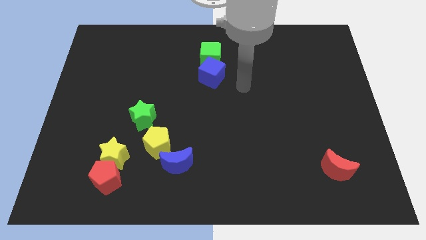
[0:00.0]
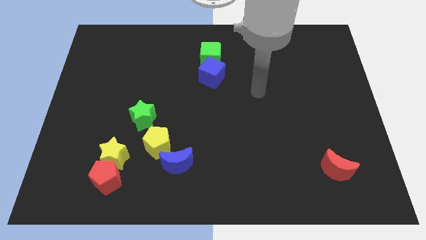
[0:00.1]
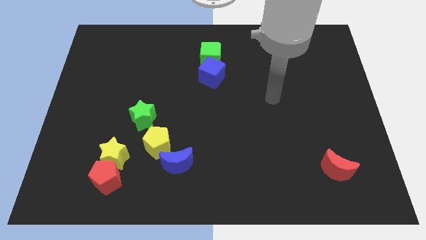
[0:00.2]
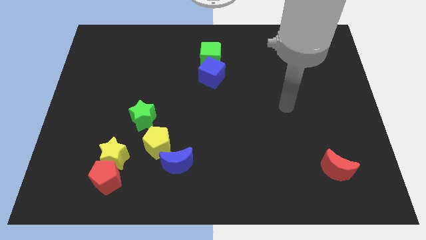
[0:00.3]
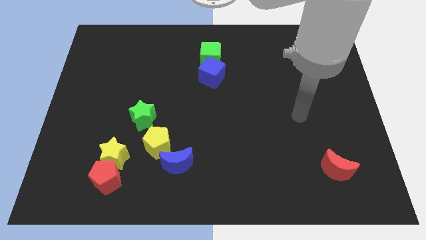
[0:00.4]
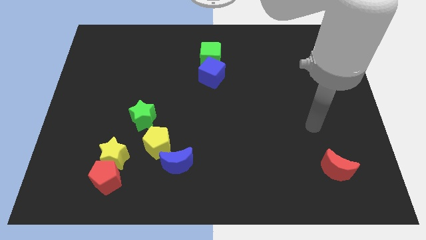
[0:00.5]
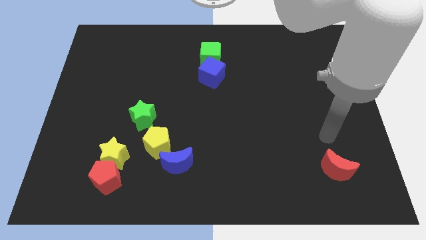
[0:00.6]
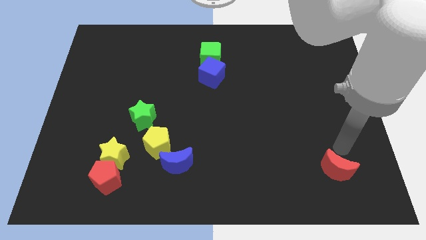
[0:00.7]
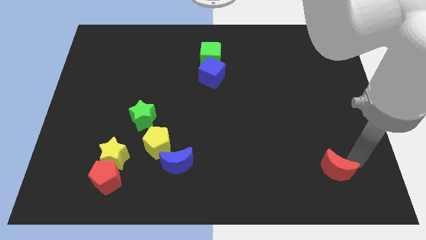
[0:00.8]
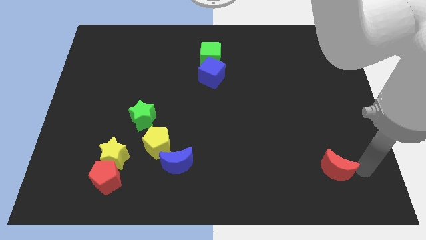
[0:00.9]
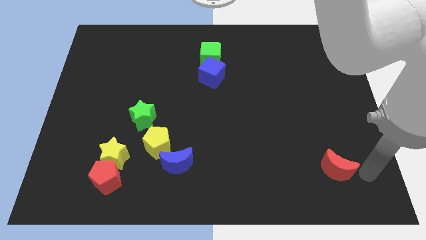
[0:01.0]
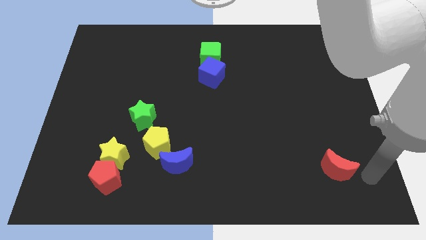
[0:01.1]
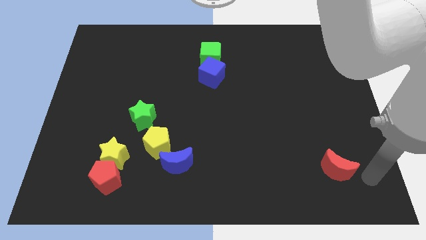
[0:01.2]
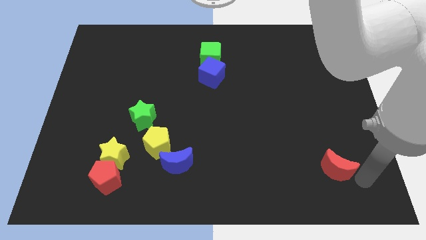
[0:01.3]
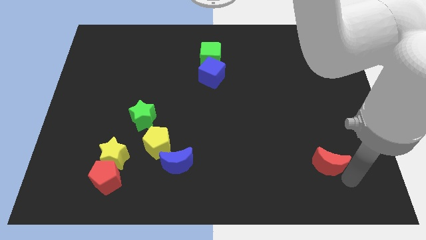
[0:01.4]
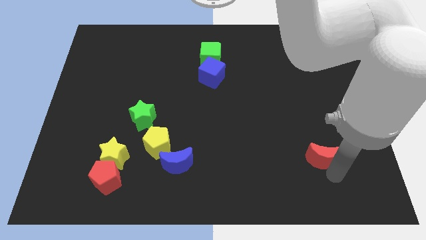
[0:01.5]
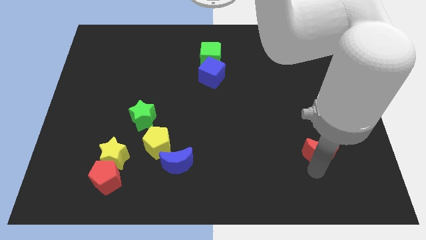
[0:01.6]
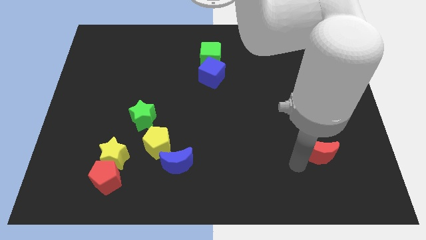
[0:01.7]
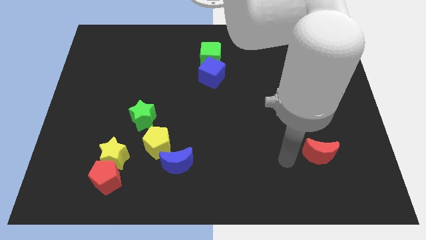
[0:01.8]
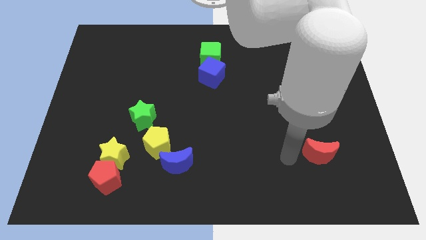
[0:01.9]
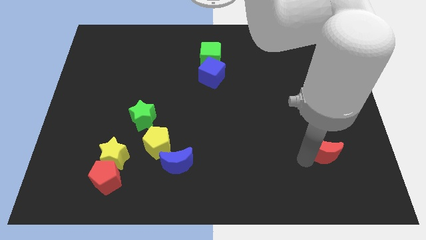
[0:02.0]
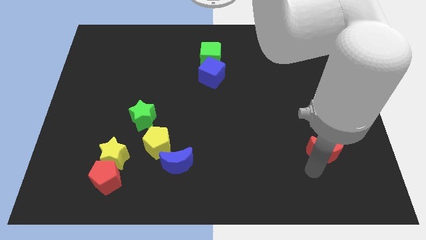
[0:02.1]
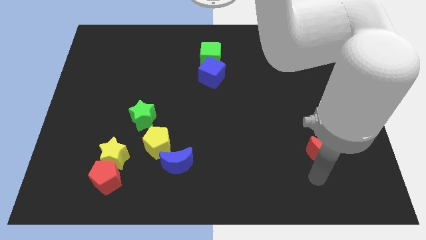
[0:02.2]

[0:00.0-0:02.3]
move red crescent slightly upwards of the board

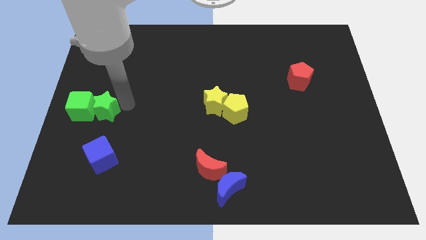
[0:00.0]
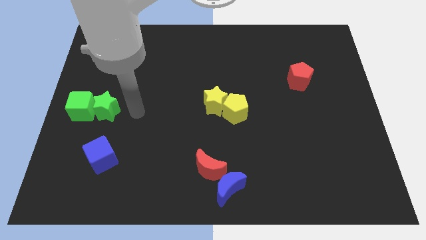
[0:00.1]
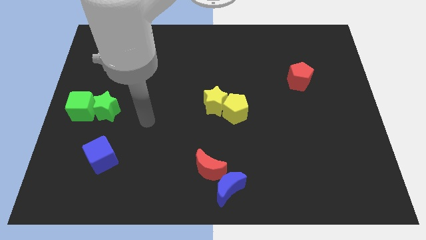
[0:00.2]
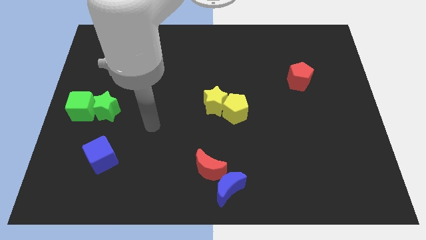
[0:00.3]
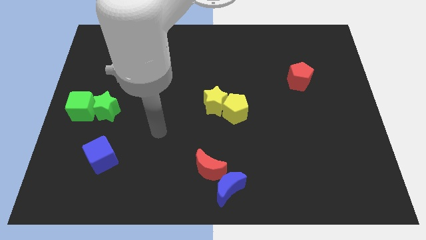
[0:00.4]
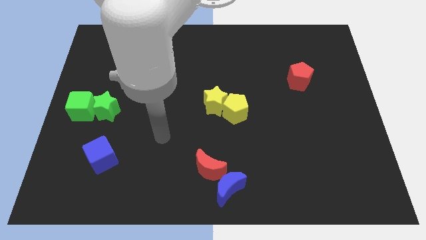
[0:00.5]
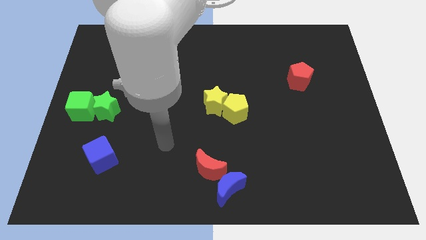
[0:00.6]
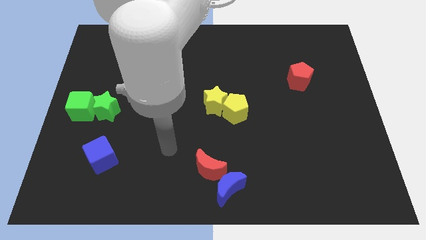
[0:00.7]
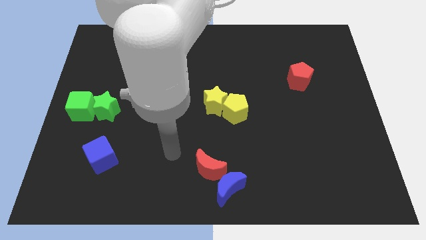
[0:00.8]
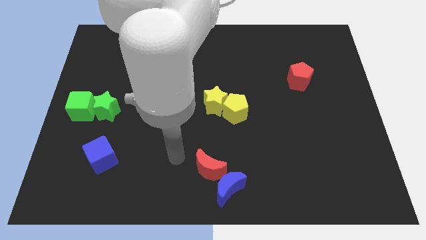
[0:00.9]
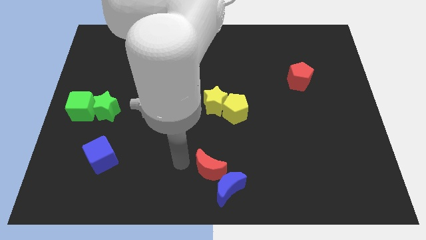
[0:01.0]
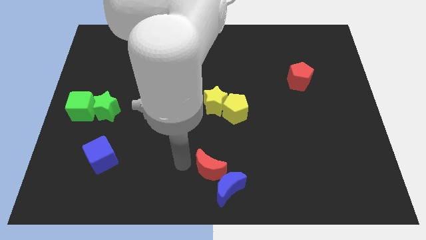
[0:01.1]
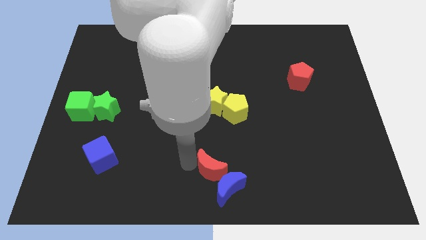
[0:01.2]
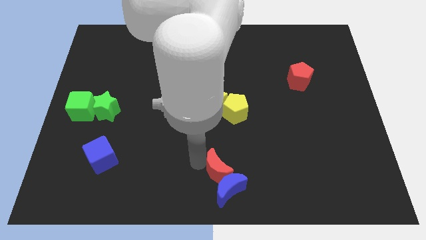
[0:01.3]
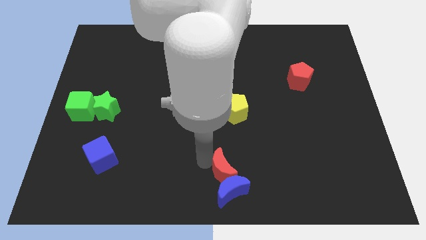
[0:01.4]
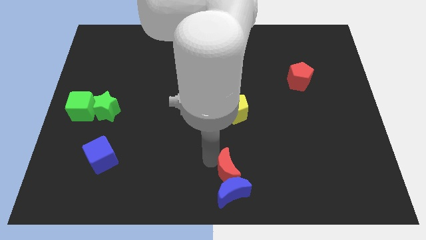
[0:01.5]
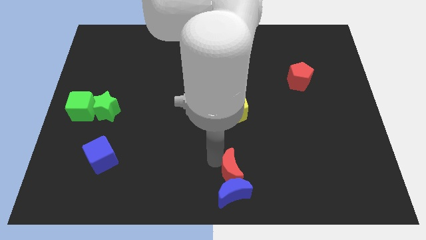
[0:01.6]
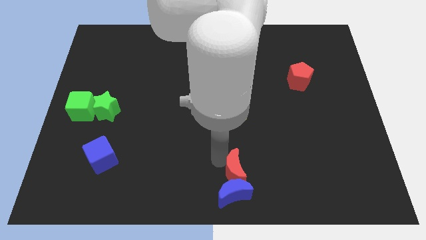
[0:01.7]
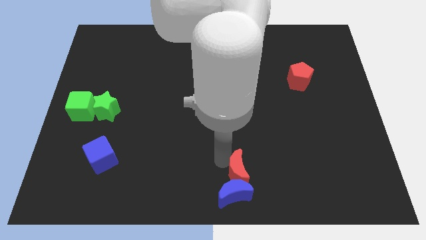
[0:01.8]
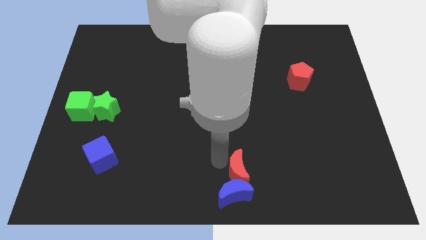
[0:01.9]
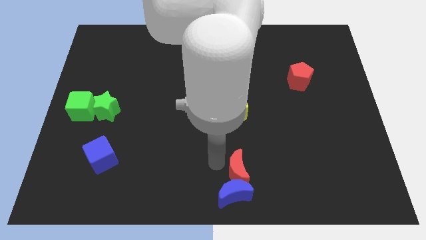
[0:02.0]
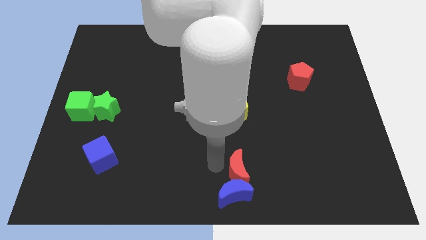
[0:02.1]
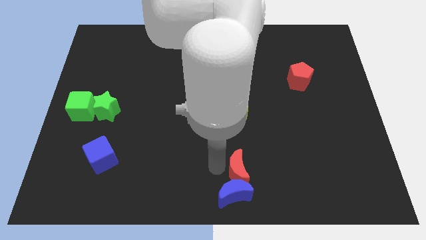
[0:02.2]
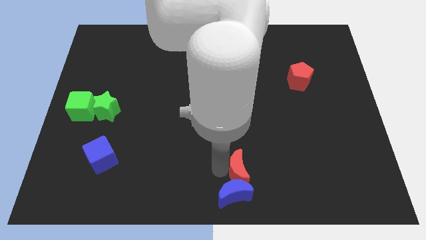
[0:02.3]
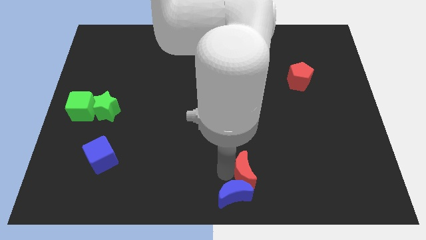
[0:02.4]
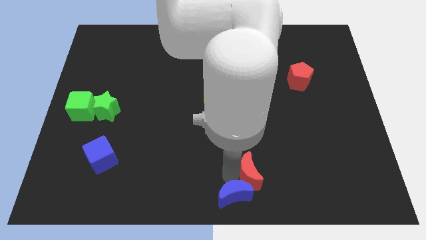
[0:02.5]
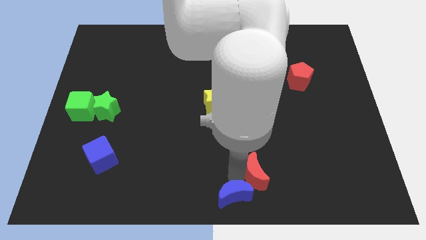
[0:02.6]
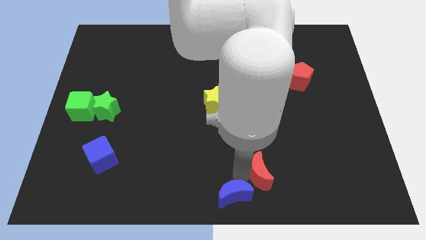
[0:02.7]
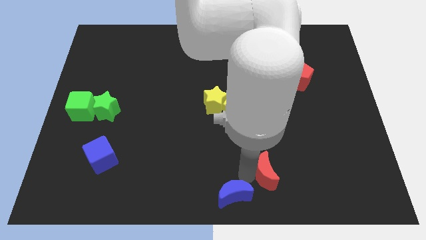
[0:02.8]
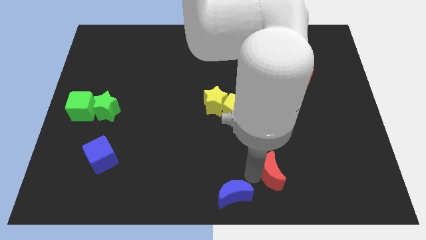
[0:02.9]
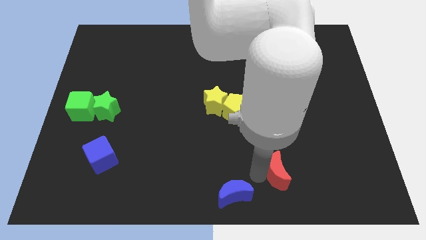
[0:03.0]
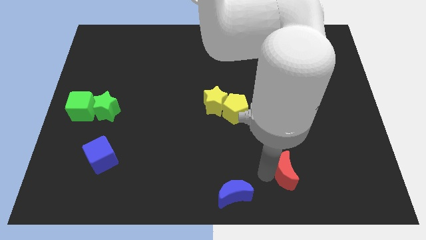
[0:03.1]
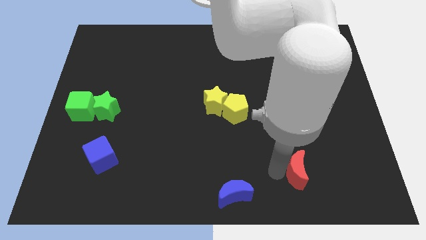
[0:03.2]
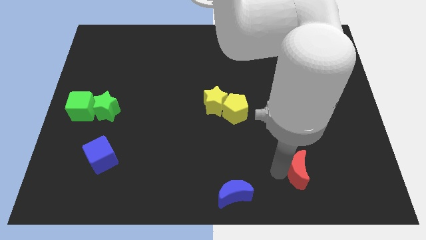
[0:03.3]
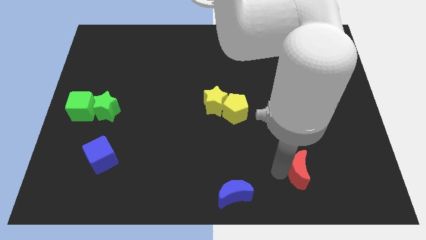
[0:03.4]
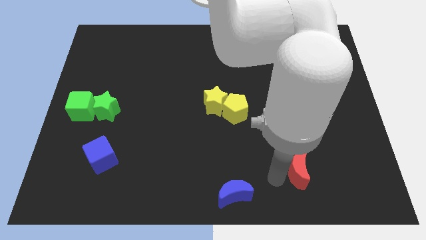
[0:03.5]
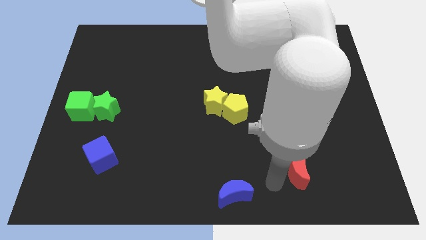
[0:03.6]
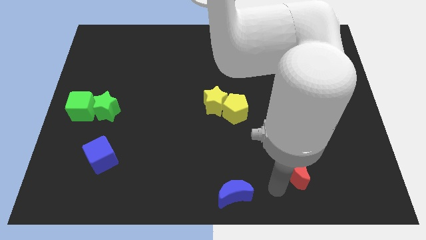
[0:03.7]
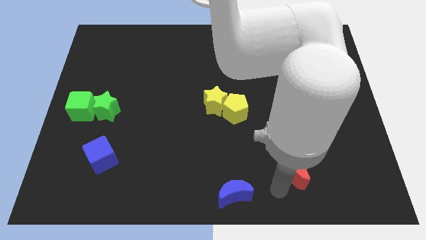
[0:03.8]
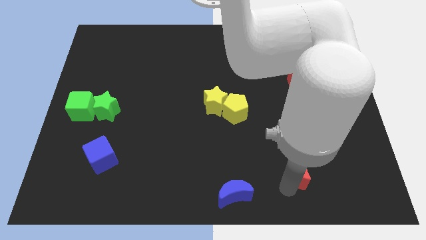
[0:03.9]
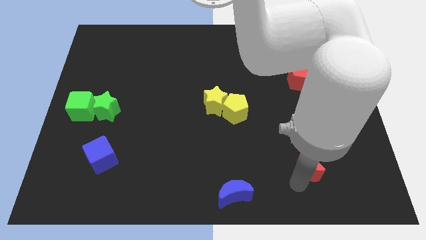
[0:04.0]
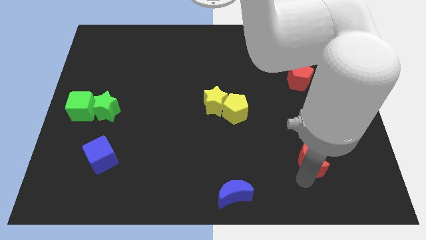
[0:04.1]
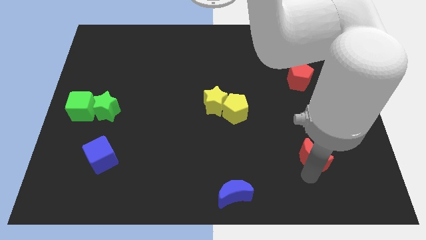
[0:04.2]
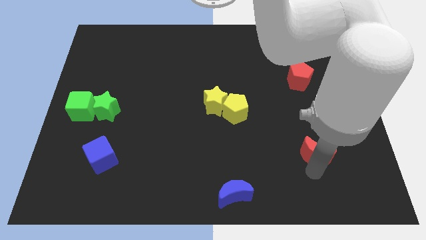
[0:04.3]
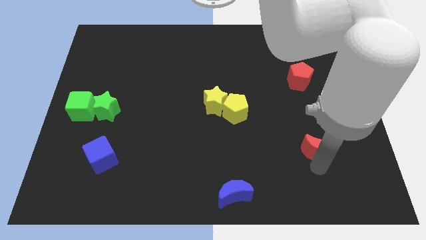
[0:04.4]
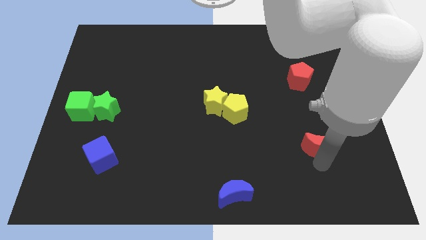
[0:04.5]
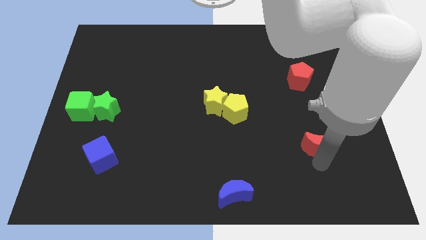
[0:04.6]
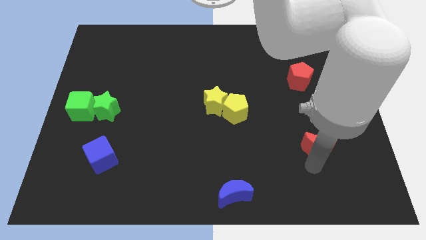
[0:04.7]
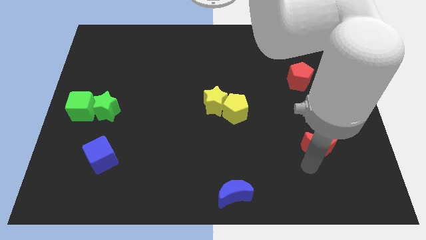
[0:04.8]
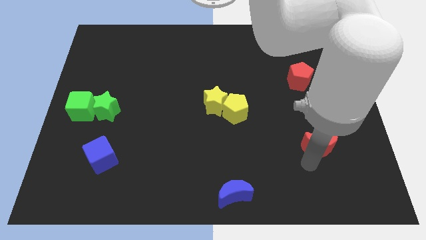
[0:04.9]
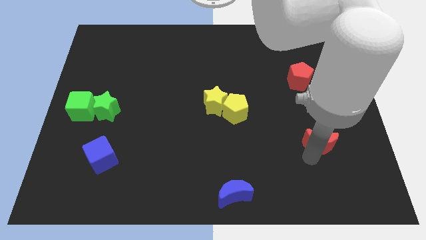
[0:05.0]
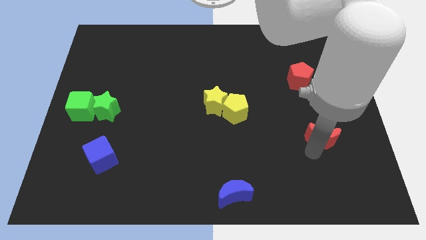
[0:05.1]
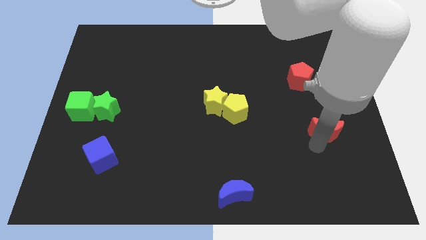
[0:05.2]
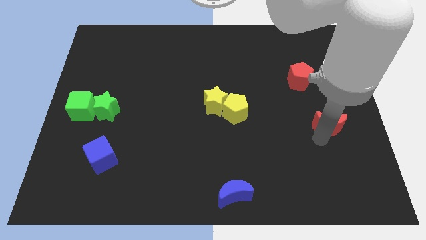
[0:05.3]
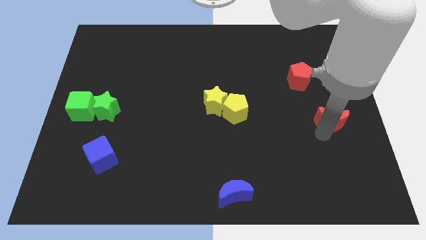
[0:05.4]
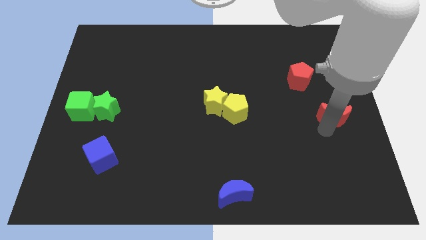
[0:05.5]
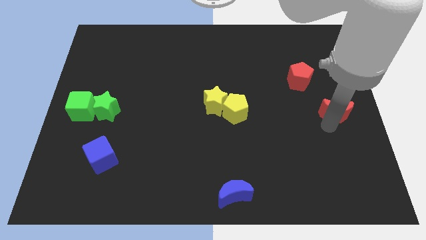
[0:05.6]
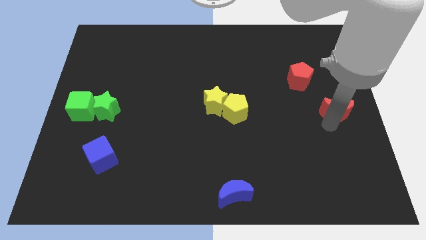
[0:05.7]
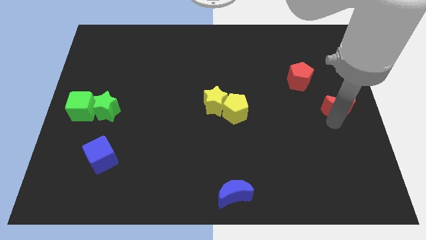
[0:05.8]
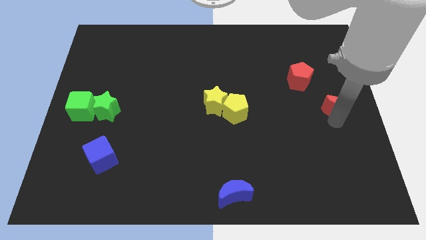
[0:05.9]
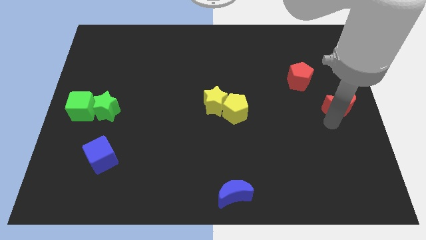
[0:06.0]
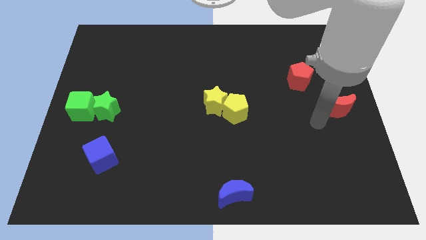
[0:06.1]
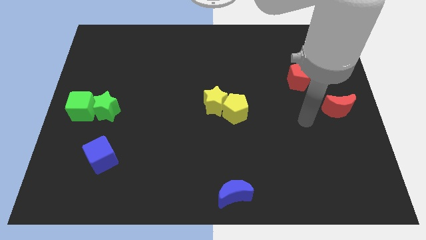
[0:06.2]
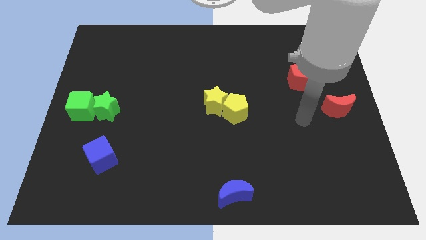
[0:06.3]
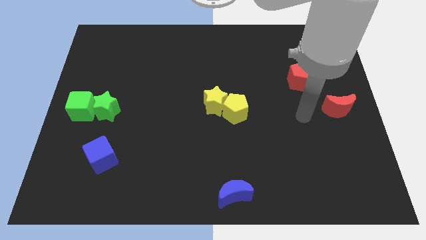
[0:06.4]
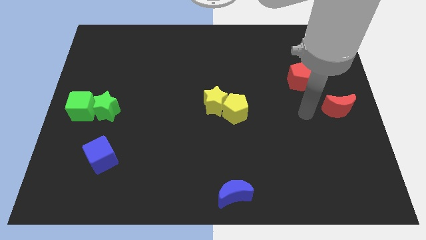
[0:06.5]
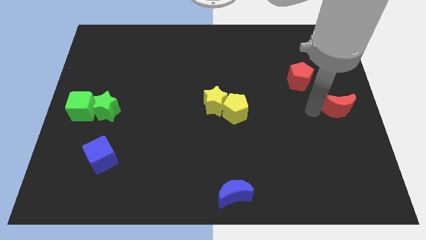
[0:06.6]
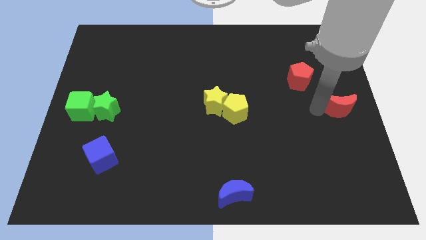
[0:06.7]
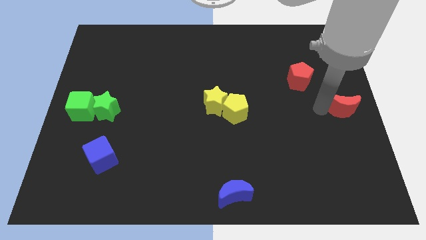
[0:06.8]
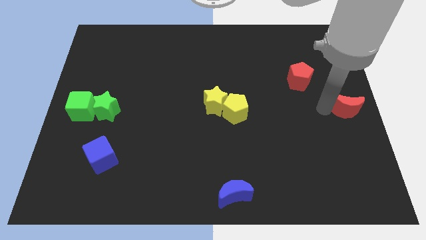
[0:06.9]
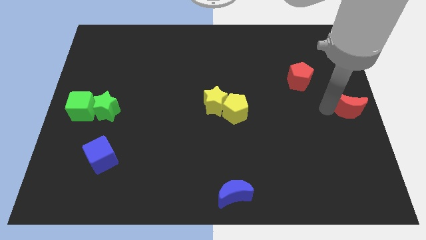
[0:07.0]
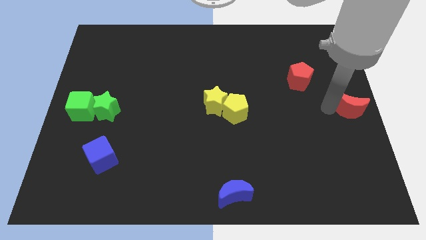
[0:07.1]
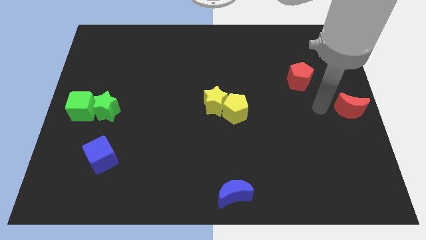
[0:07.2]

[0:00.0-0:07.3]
move the red crescent to the center right of the table
